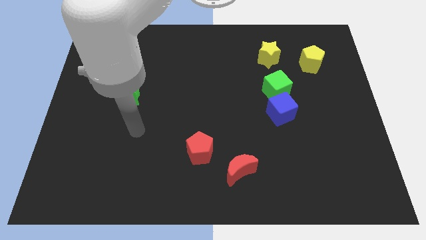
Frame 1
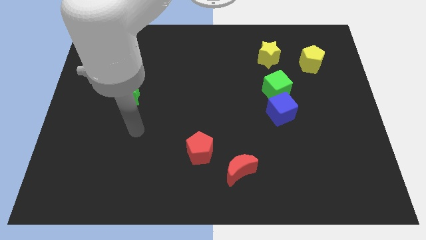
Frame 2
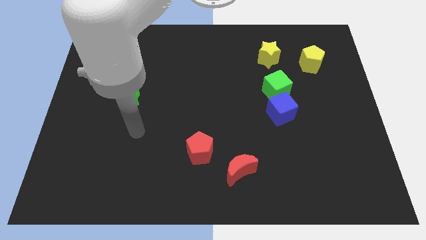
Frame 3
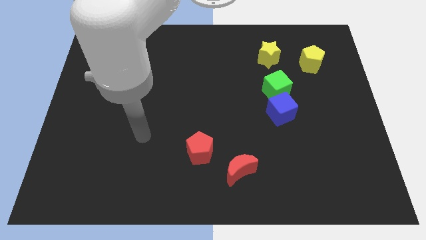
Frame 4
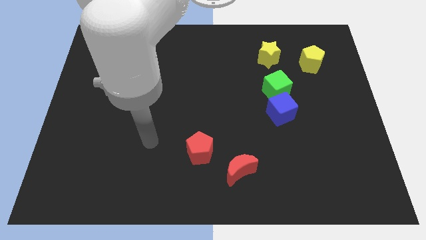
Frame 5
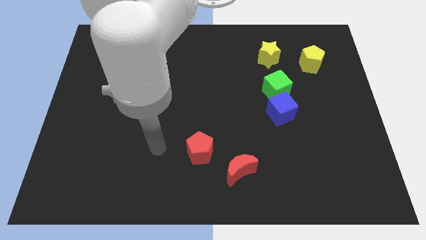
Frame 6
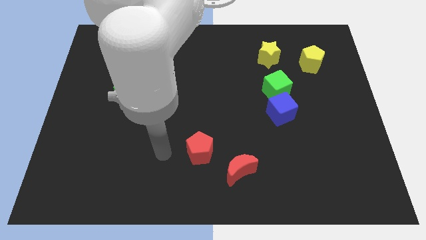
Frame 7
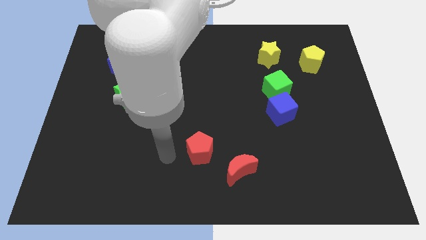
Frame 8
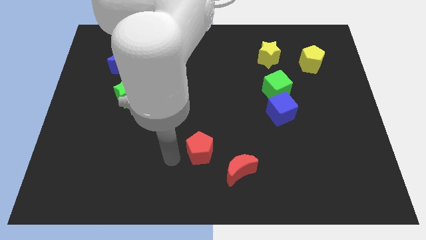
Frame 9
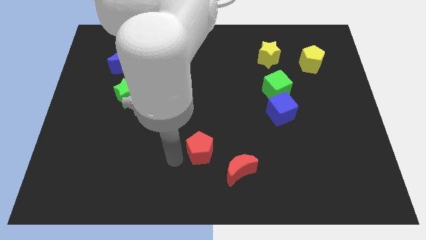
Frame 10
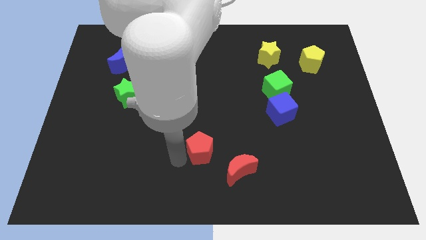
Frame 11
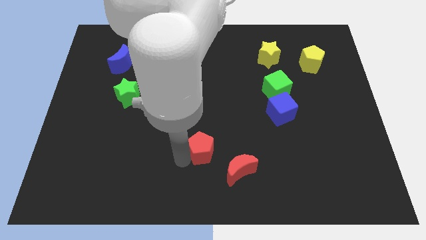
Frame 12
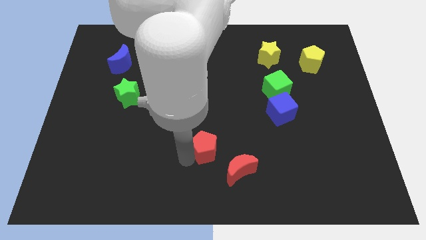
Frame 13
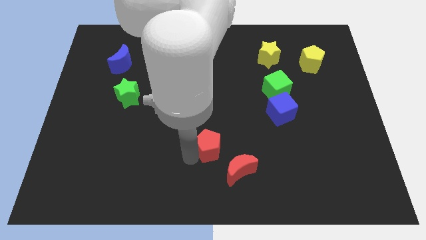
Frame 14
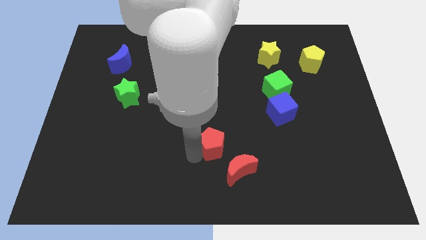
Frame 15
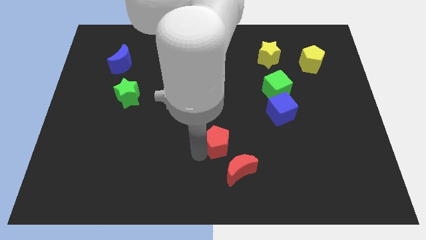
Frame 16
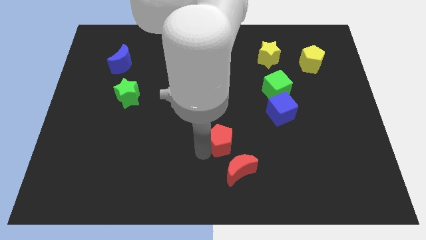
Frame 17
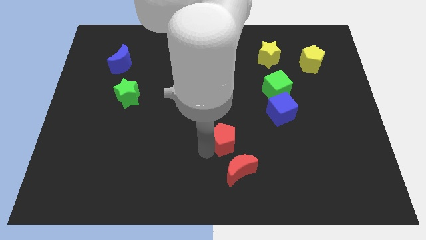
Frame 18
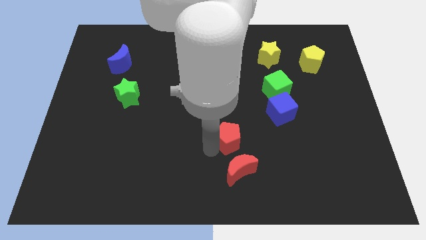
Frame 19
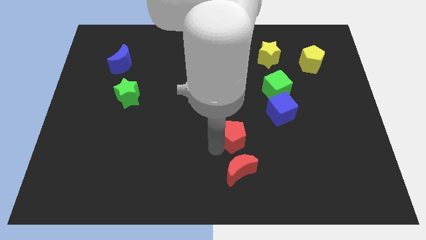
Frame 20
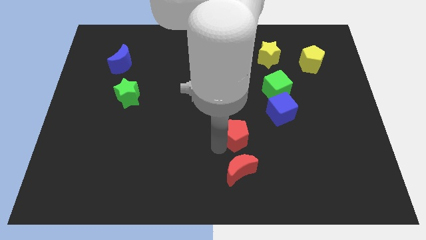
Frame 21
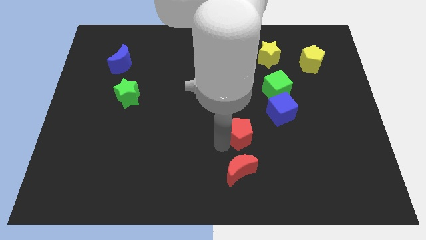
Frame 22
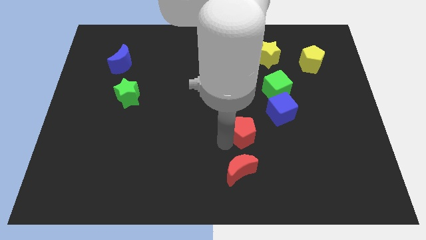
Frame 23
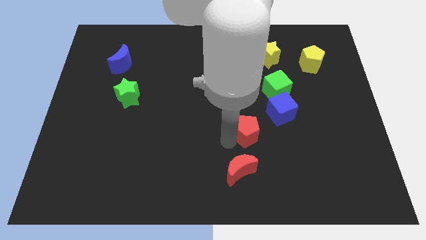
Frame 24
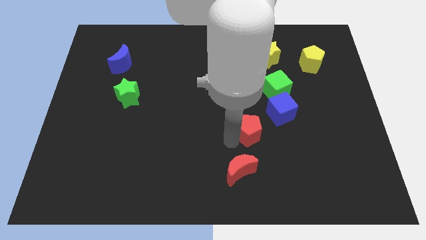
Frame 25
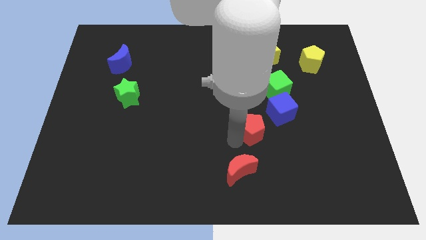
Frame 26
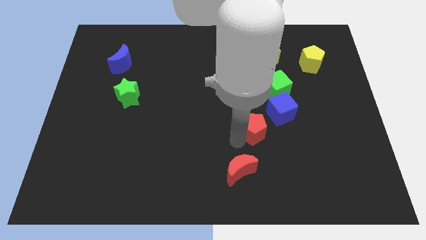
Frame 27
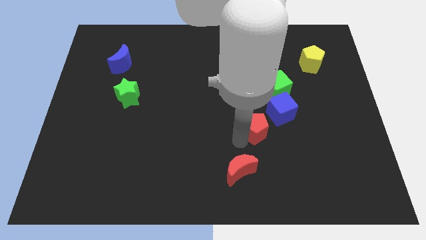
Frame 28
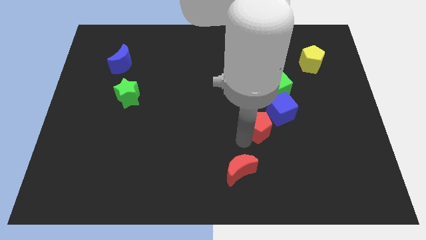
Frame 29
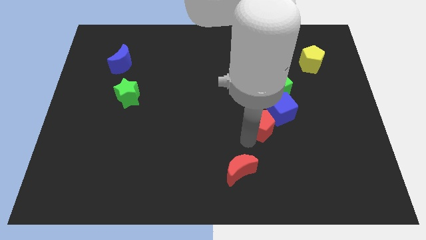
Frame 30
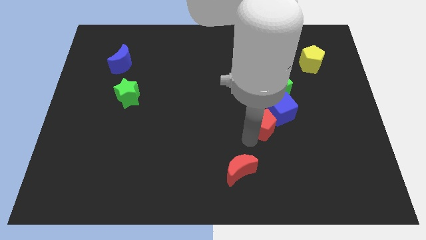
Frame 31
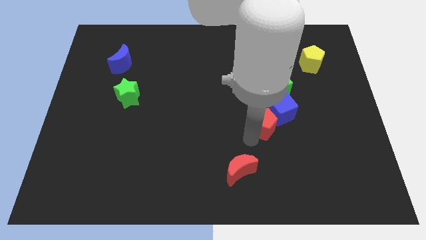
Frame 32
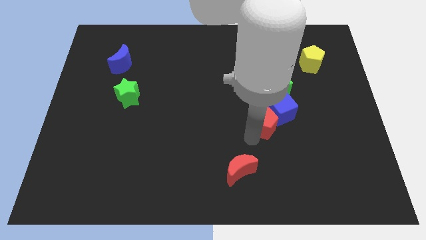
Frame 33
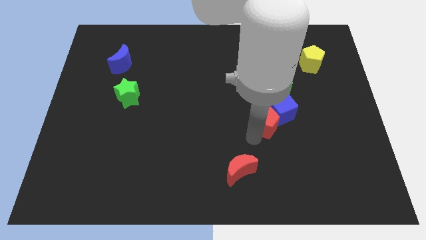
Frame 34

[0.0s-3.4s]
slide the red pentagon next to the blue cube

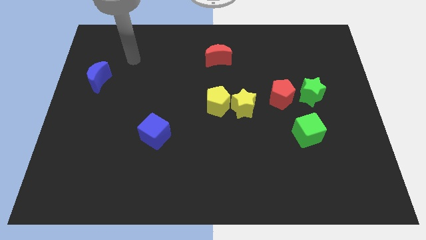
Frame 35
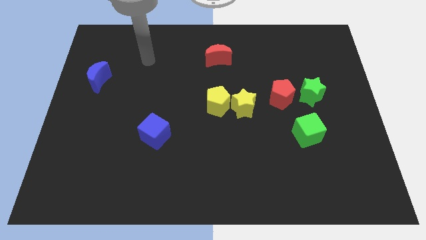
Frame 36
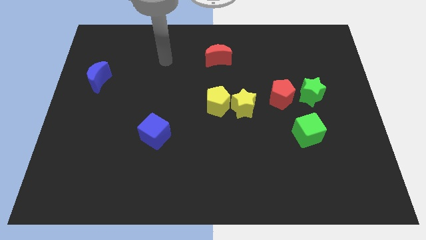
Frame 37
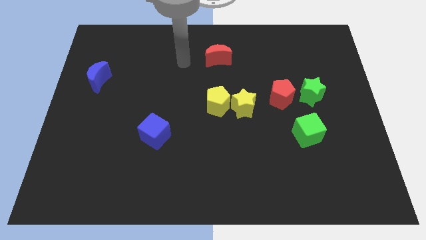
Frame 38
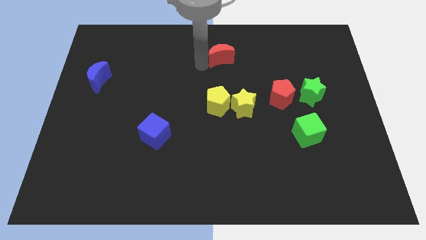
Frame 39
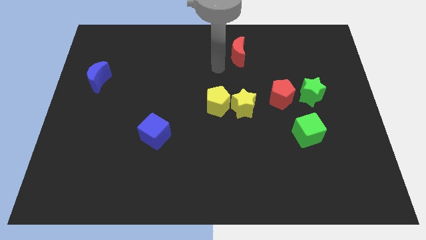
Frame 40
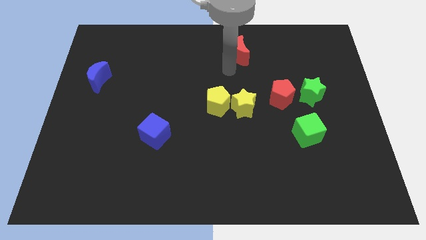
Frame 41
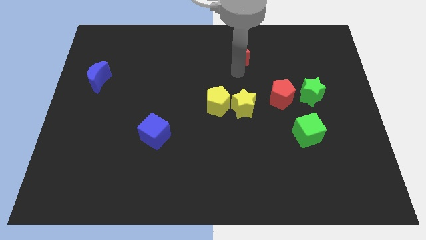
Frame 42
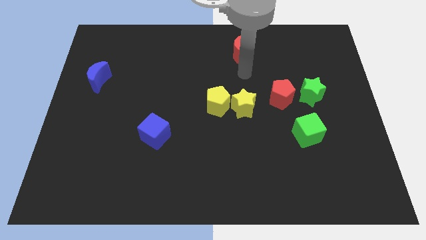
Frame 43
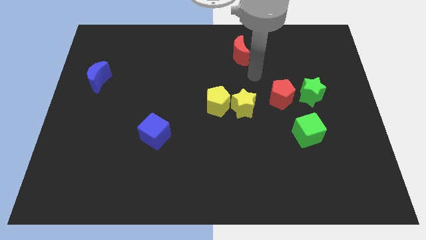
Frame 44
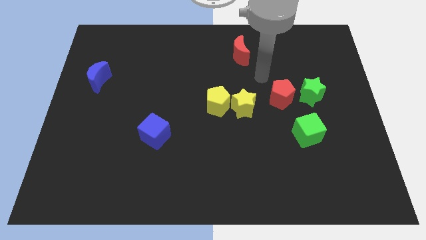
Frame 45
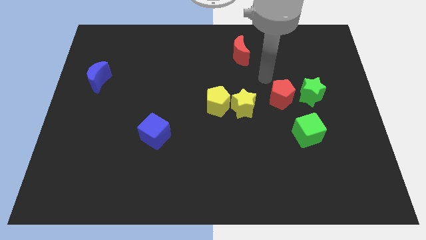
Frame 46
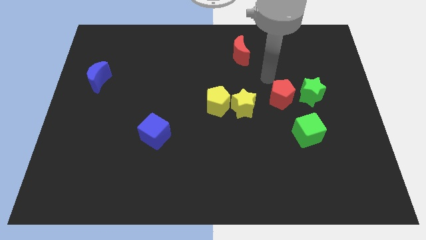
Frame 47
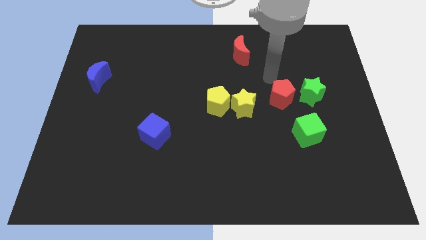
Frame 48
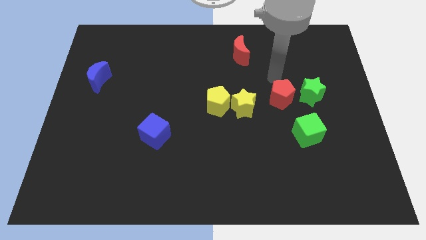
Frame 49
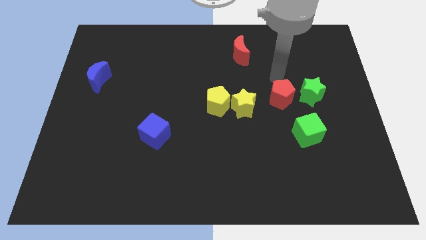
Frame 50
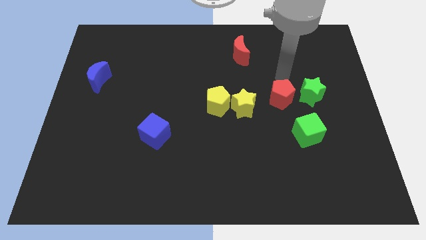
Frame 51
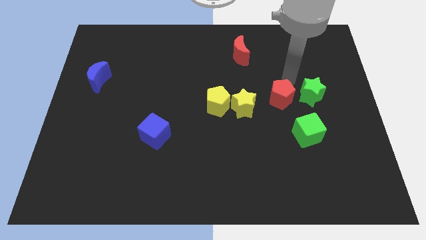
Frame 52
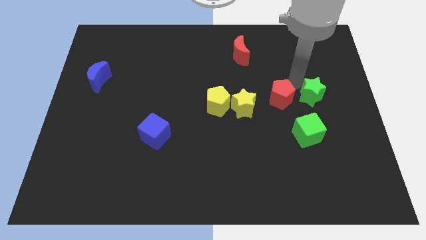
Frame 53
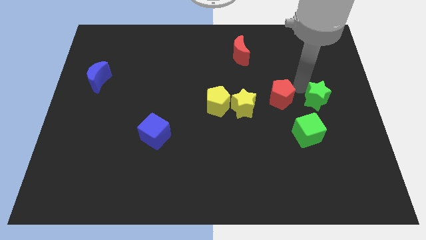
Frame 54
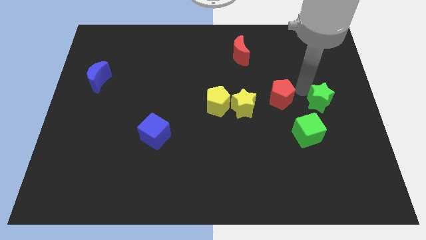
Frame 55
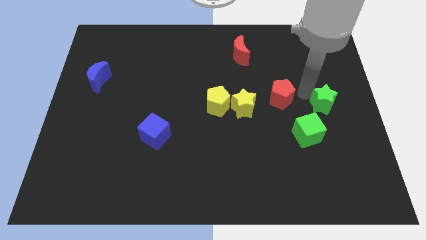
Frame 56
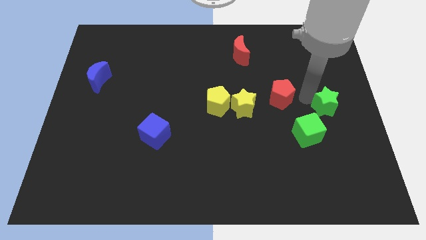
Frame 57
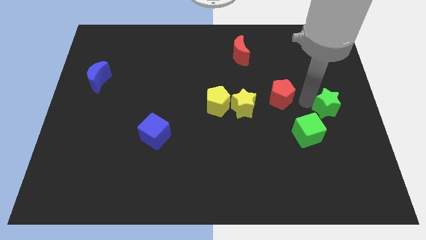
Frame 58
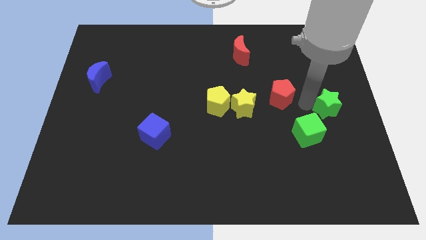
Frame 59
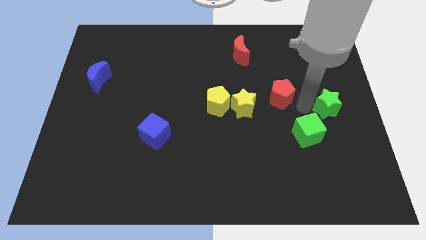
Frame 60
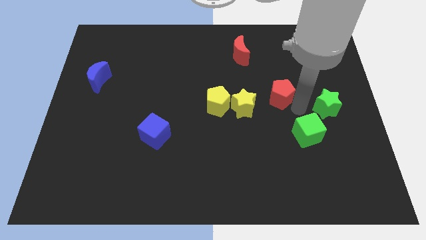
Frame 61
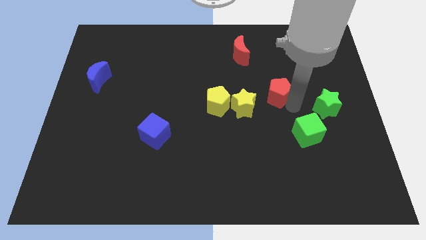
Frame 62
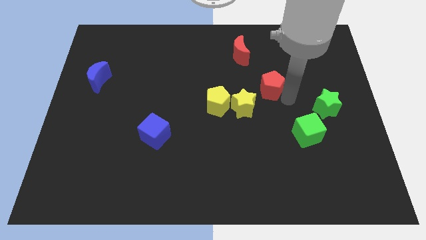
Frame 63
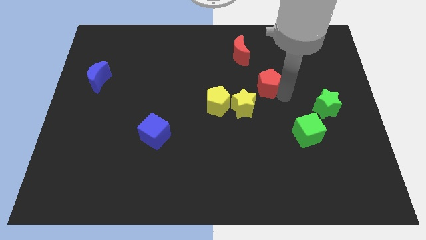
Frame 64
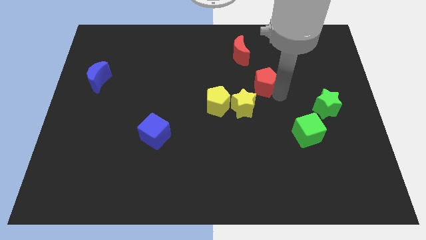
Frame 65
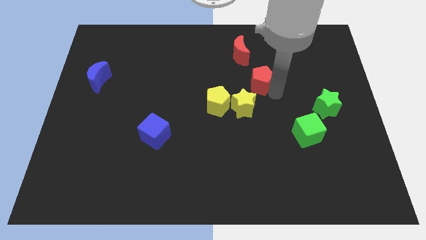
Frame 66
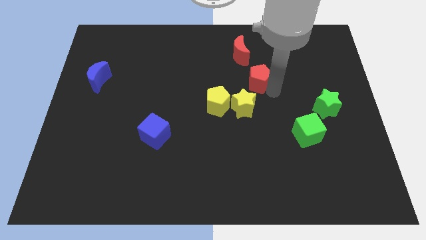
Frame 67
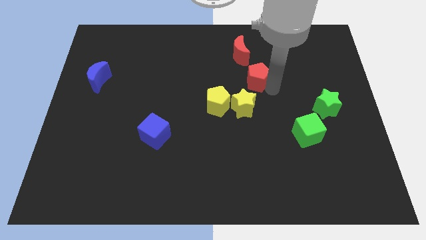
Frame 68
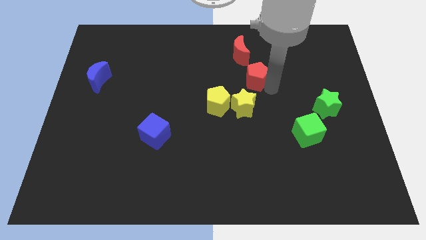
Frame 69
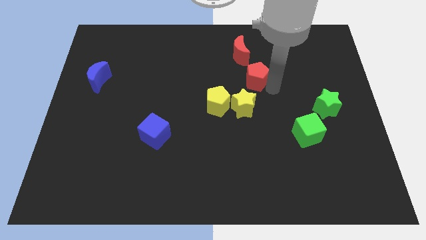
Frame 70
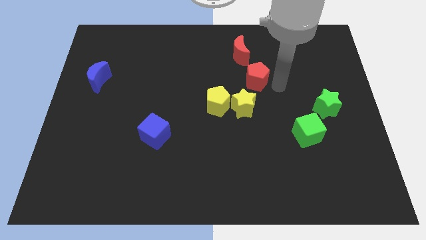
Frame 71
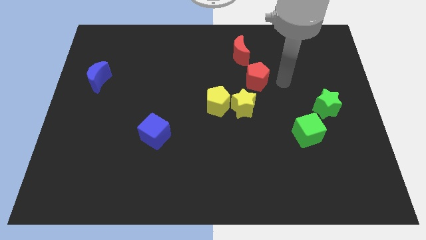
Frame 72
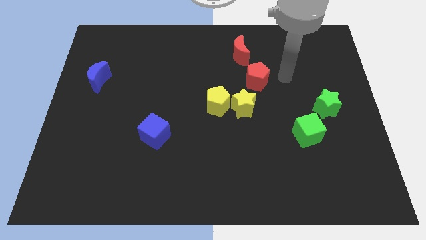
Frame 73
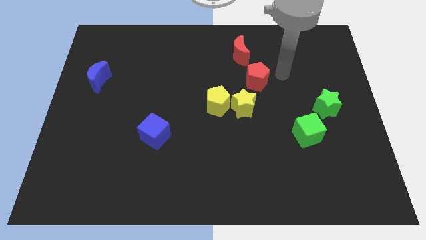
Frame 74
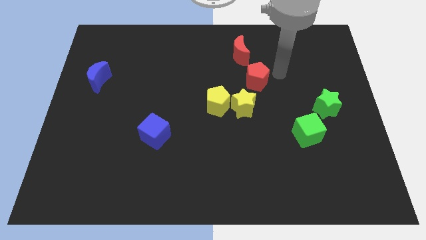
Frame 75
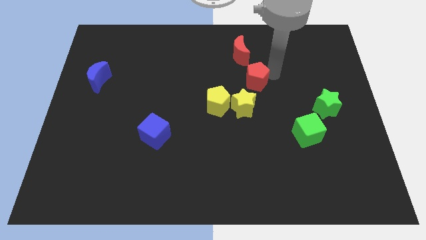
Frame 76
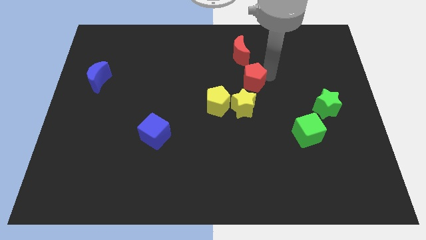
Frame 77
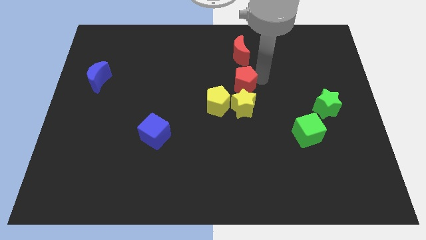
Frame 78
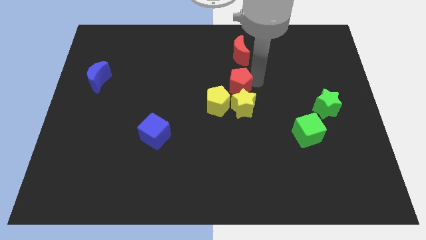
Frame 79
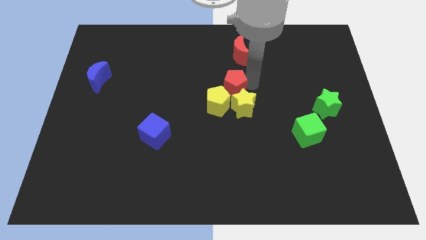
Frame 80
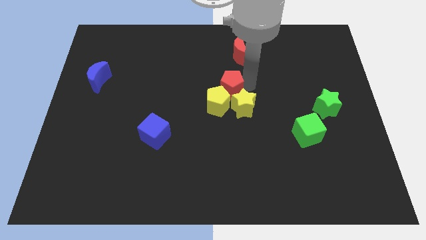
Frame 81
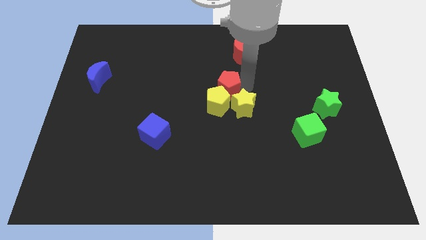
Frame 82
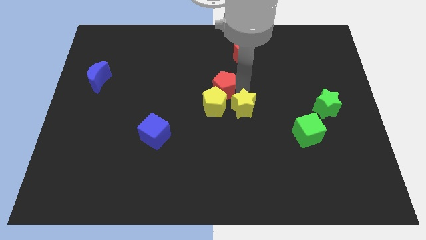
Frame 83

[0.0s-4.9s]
move the red pentagon close to the yellow pentagon
